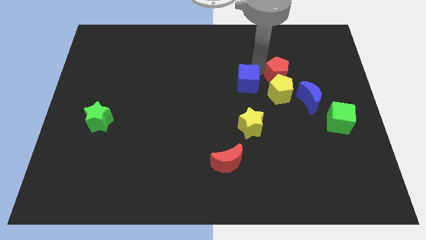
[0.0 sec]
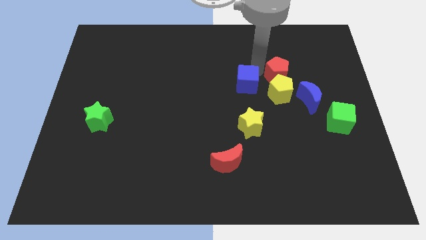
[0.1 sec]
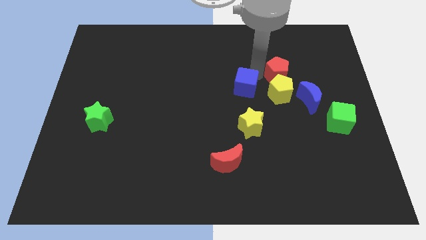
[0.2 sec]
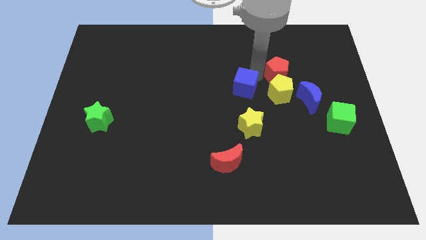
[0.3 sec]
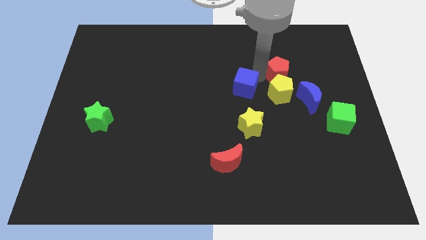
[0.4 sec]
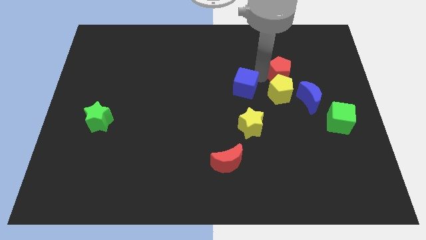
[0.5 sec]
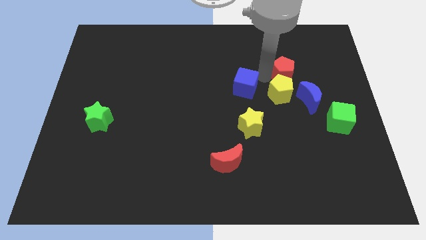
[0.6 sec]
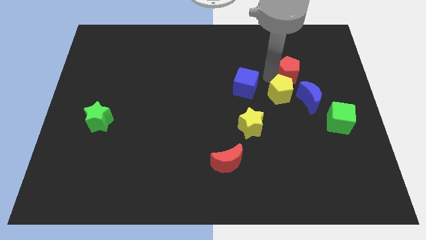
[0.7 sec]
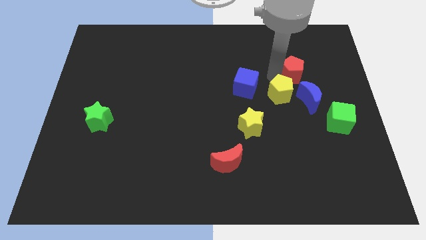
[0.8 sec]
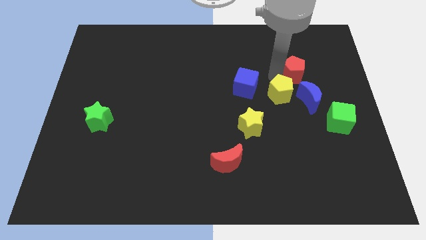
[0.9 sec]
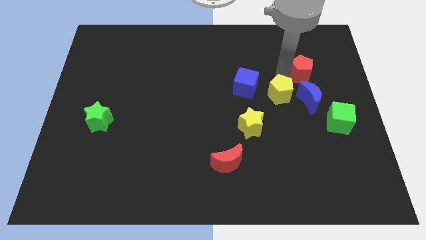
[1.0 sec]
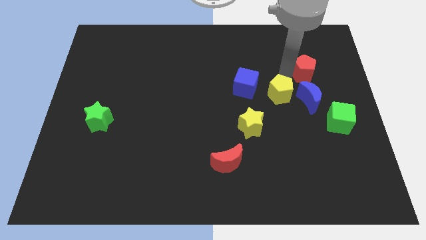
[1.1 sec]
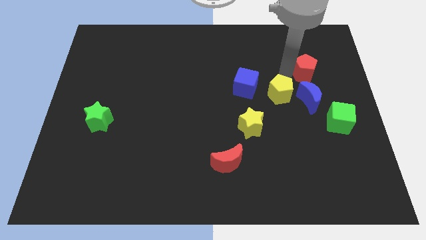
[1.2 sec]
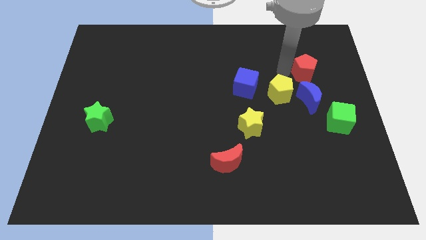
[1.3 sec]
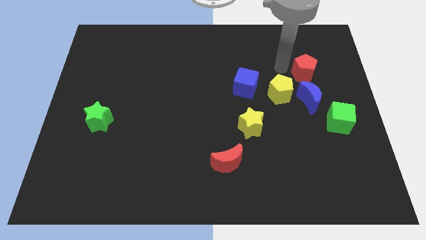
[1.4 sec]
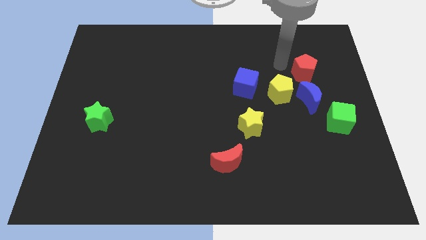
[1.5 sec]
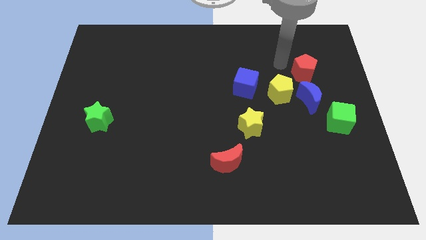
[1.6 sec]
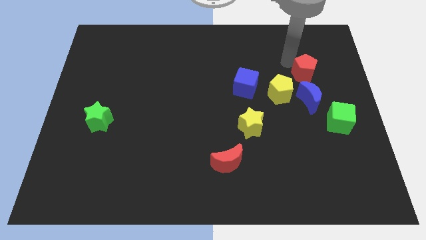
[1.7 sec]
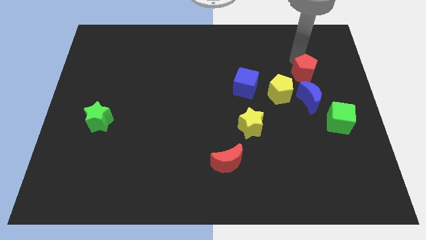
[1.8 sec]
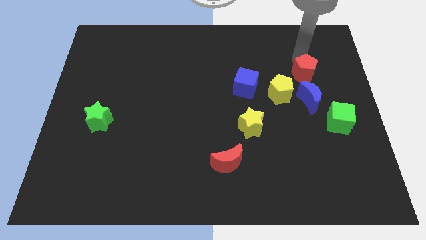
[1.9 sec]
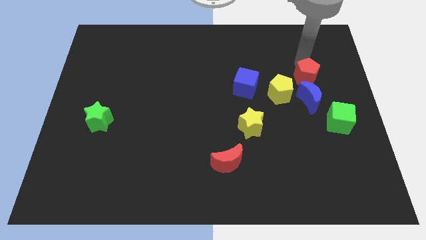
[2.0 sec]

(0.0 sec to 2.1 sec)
separate blue cube and red pentagon

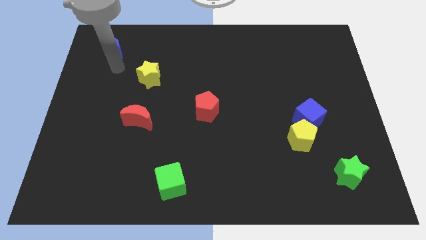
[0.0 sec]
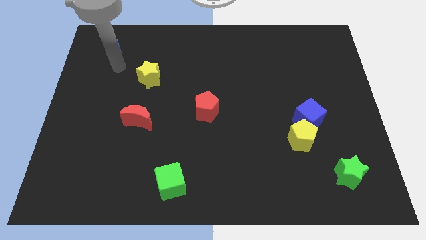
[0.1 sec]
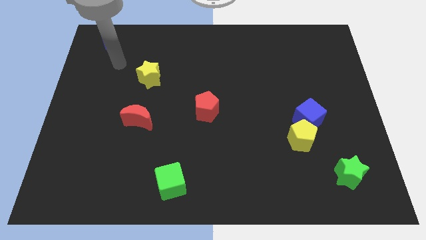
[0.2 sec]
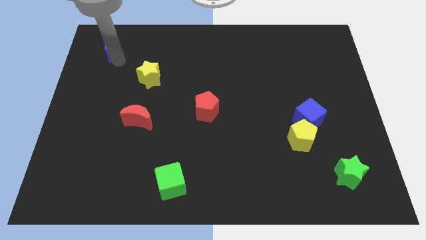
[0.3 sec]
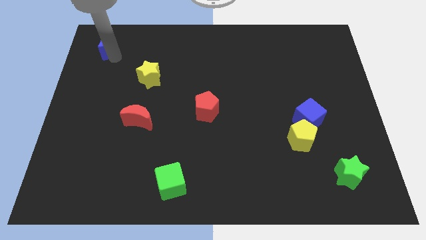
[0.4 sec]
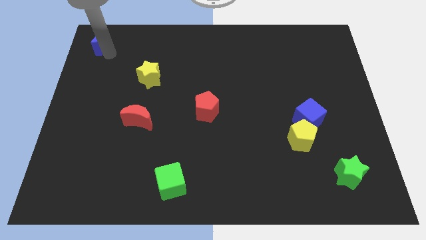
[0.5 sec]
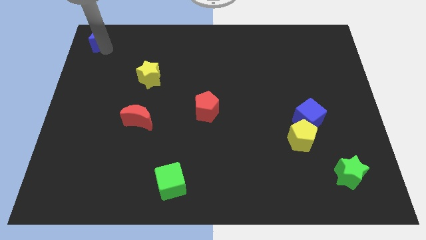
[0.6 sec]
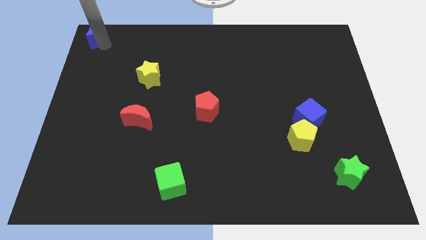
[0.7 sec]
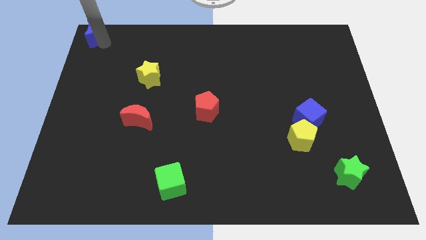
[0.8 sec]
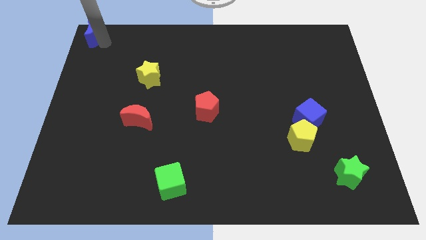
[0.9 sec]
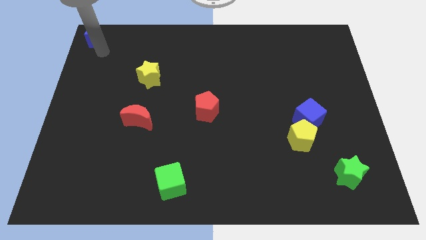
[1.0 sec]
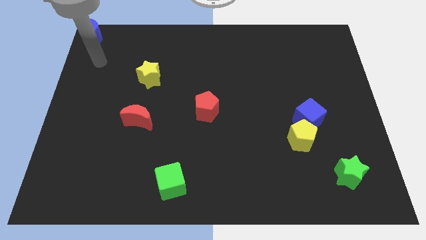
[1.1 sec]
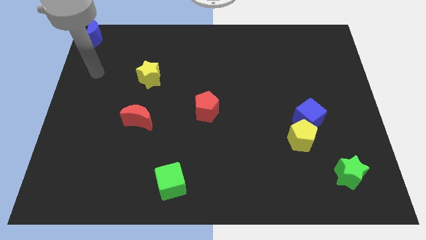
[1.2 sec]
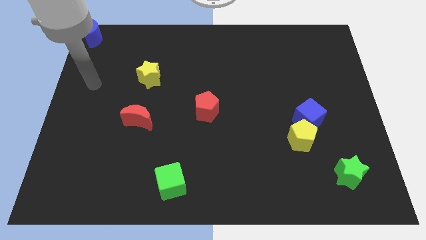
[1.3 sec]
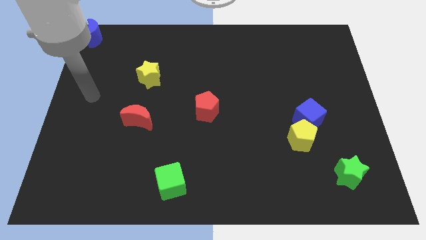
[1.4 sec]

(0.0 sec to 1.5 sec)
move the blue crescent to the top left corner of the board

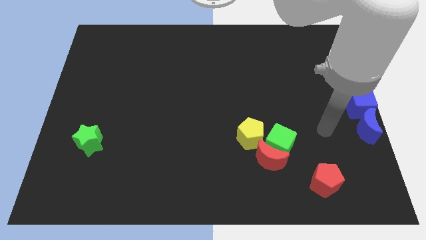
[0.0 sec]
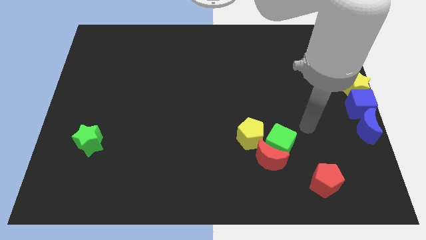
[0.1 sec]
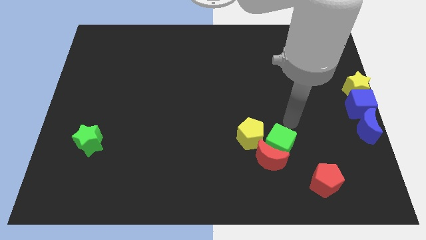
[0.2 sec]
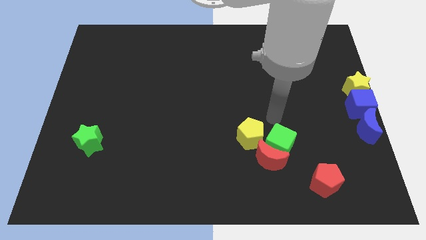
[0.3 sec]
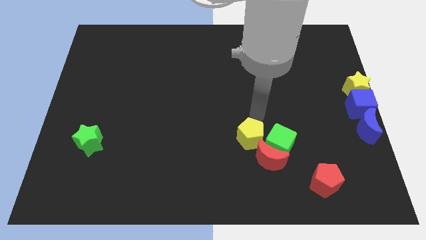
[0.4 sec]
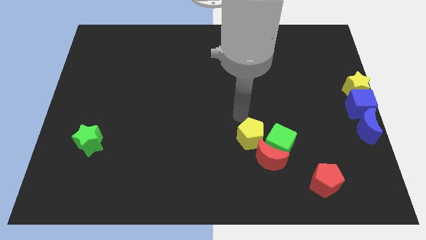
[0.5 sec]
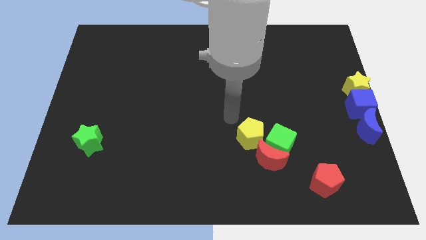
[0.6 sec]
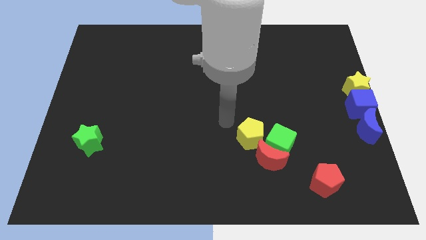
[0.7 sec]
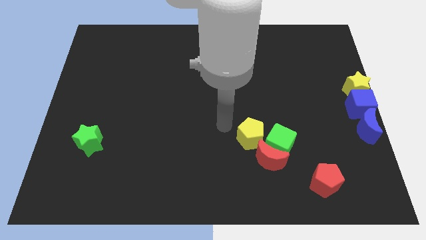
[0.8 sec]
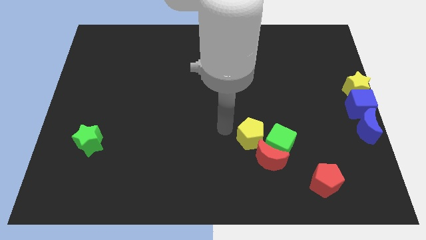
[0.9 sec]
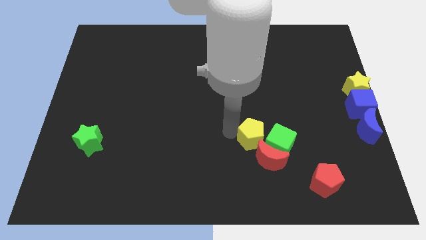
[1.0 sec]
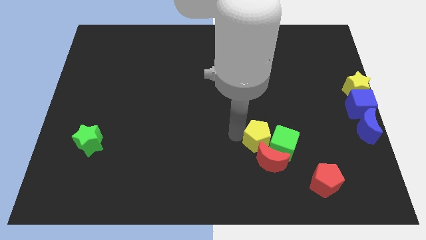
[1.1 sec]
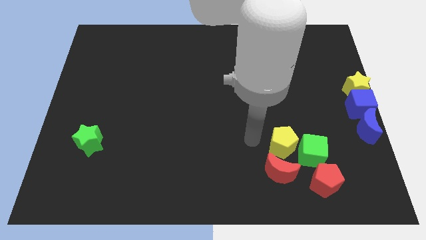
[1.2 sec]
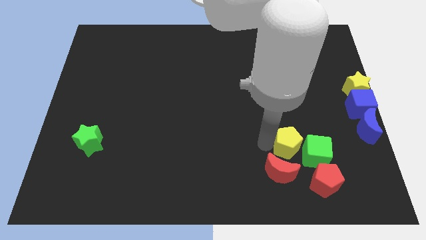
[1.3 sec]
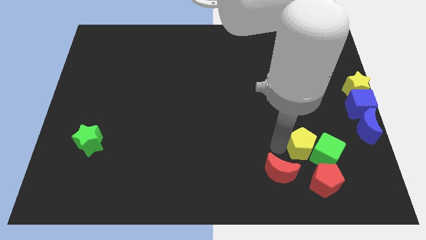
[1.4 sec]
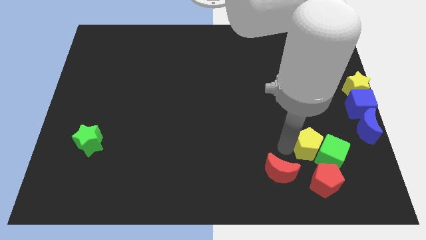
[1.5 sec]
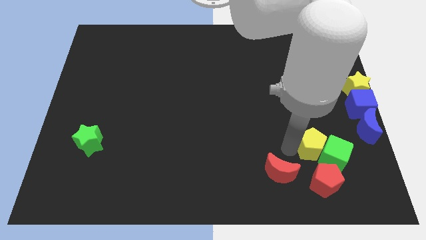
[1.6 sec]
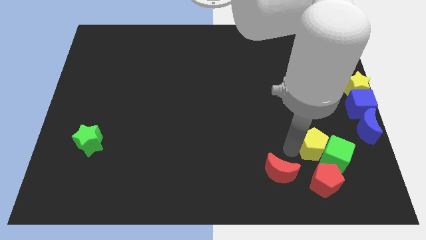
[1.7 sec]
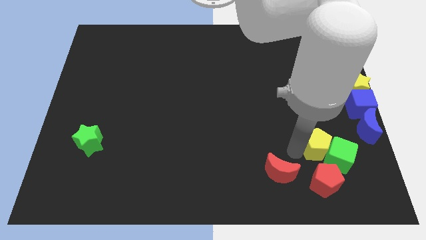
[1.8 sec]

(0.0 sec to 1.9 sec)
push the green cube with the yellow pentagon towards the bottom right of the board

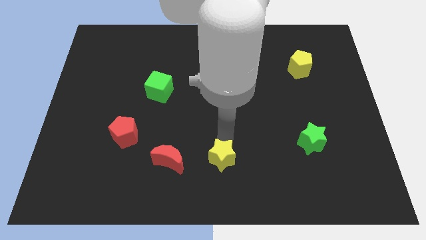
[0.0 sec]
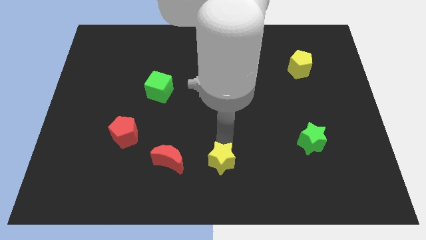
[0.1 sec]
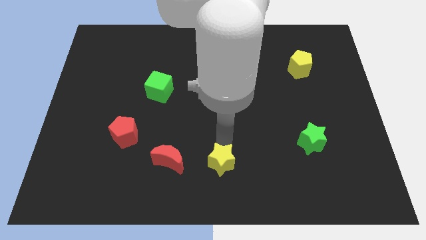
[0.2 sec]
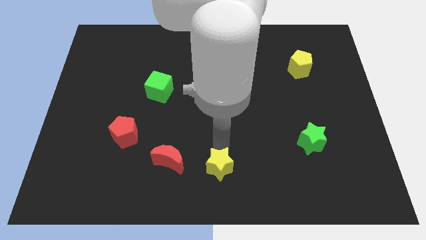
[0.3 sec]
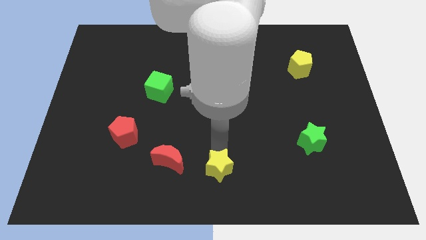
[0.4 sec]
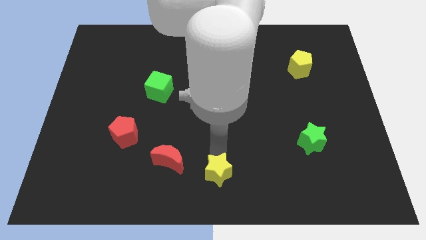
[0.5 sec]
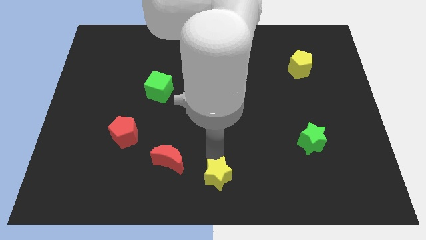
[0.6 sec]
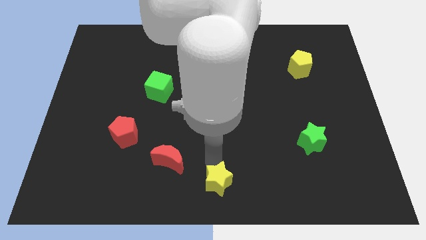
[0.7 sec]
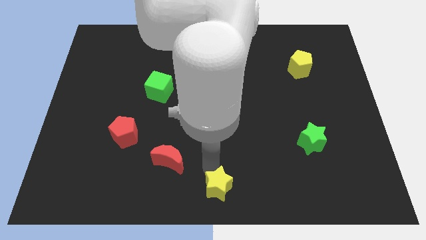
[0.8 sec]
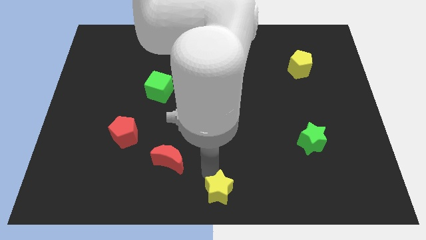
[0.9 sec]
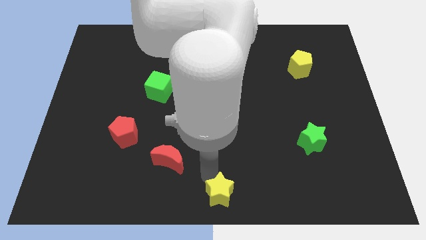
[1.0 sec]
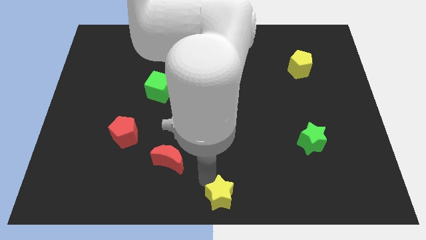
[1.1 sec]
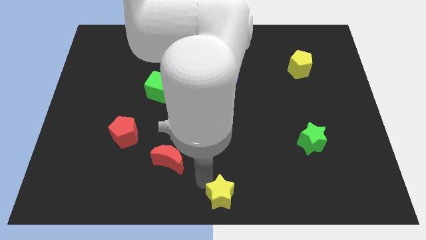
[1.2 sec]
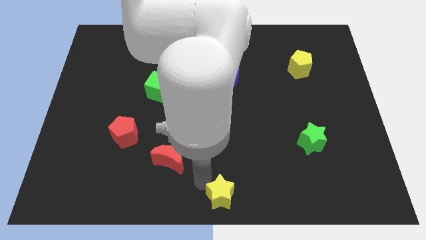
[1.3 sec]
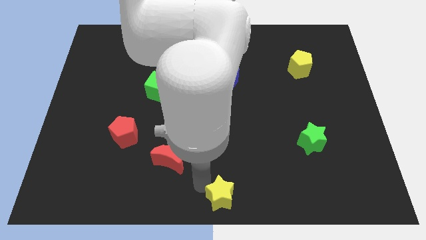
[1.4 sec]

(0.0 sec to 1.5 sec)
push the yellow star at the bottom center of the board

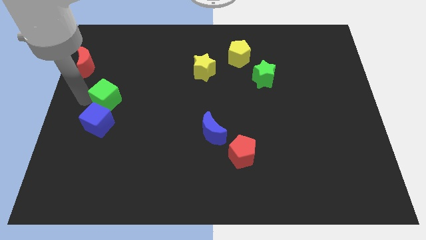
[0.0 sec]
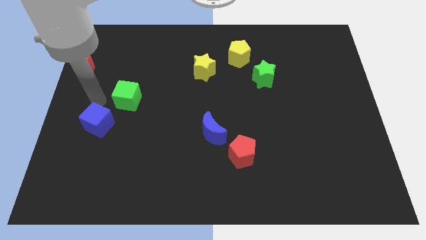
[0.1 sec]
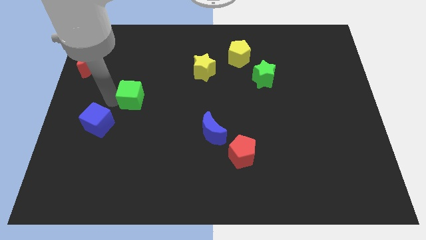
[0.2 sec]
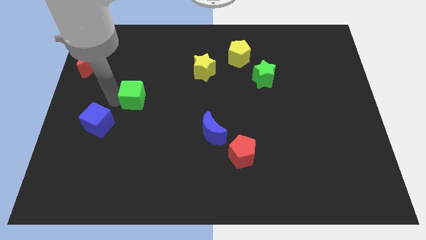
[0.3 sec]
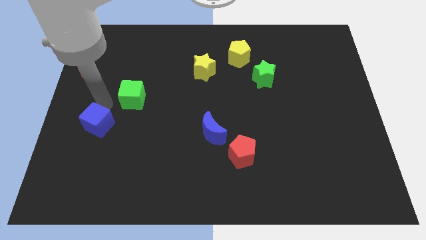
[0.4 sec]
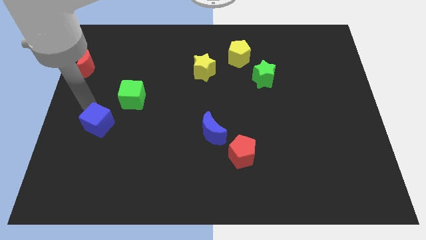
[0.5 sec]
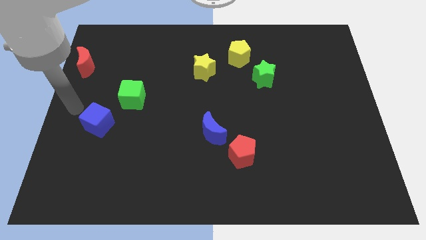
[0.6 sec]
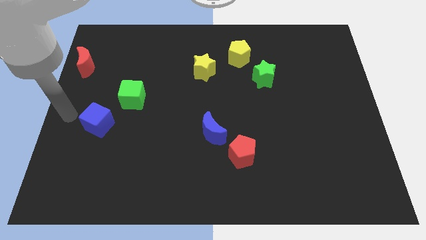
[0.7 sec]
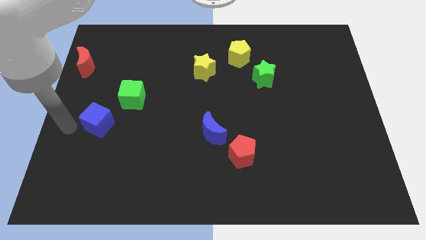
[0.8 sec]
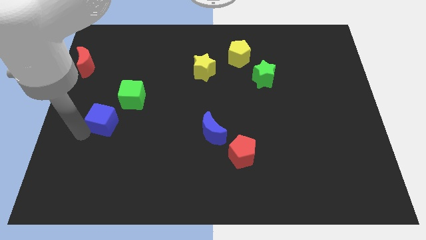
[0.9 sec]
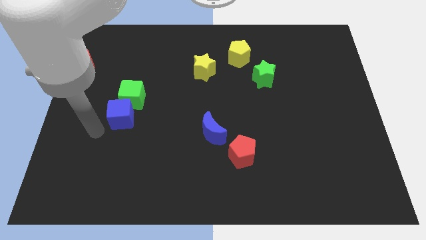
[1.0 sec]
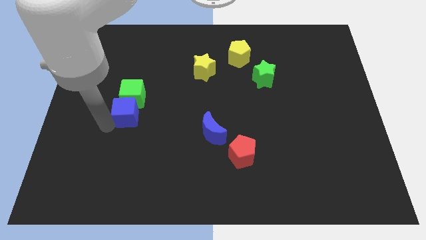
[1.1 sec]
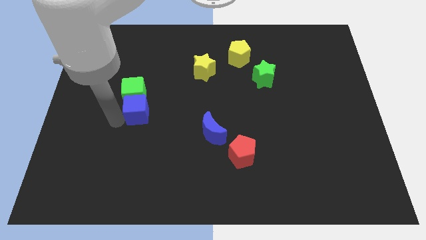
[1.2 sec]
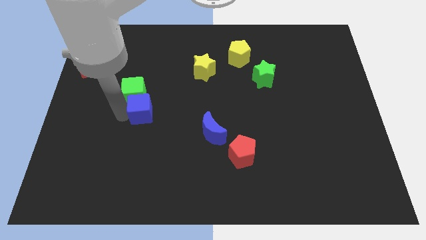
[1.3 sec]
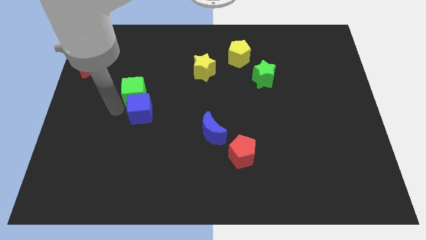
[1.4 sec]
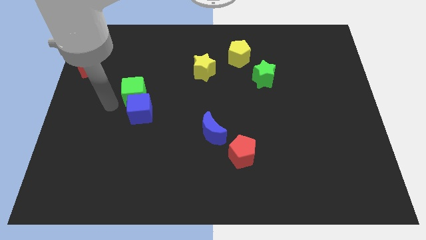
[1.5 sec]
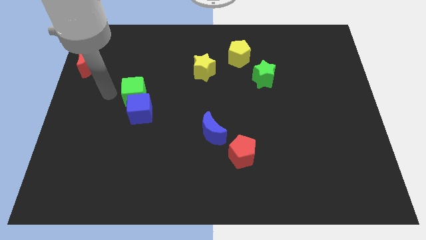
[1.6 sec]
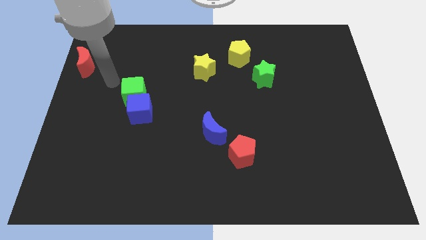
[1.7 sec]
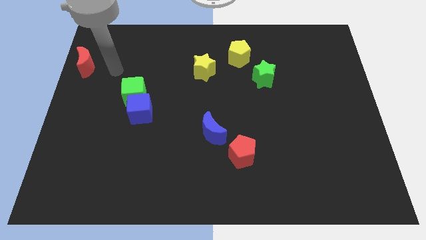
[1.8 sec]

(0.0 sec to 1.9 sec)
move two cubes slightly to the right side
